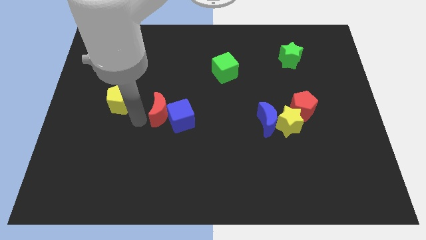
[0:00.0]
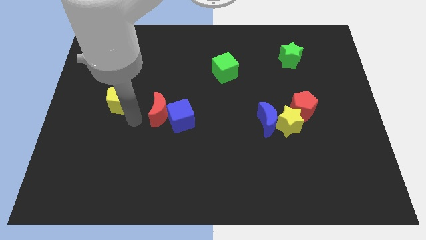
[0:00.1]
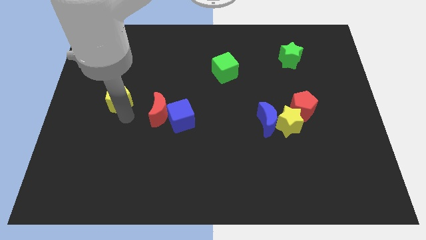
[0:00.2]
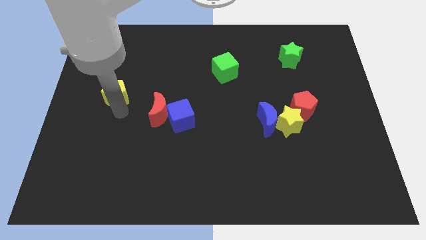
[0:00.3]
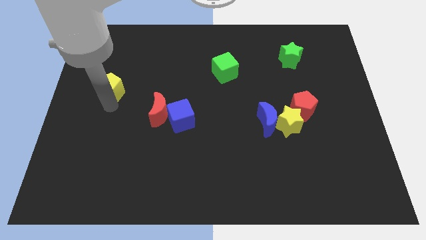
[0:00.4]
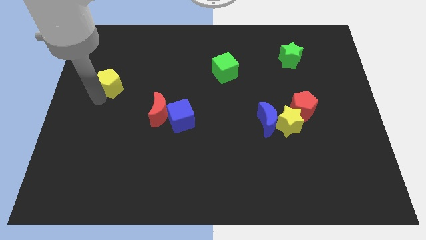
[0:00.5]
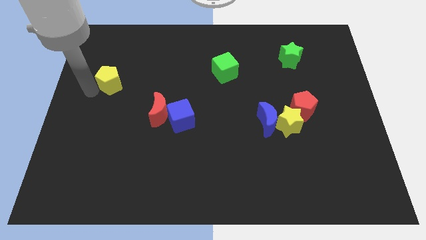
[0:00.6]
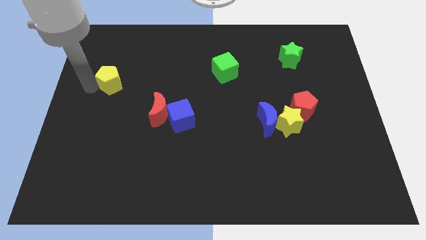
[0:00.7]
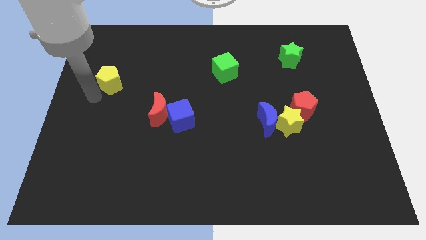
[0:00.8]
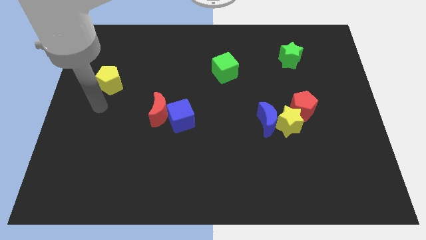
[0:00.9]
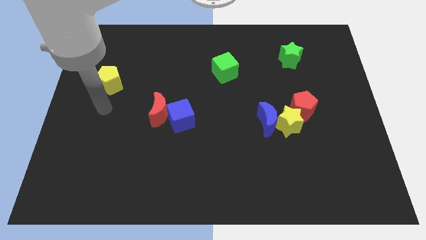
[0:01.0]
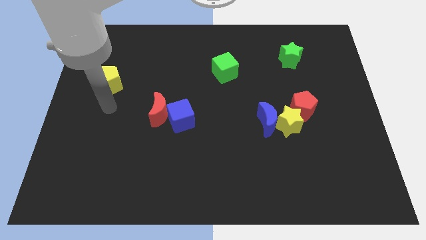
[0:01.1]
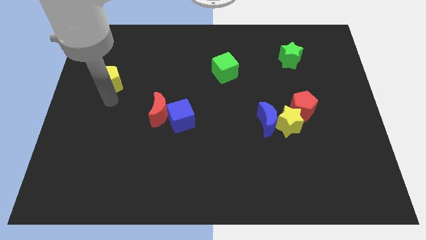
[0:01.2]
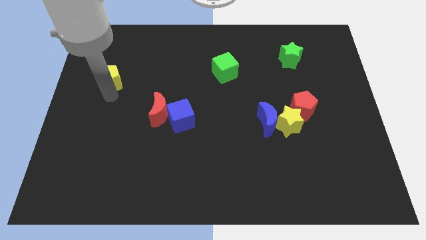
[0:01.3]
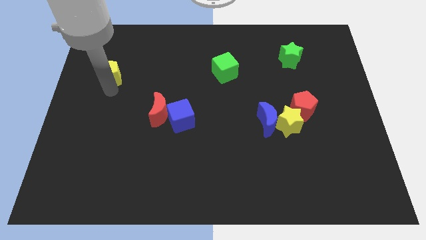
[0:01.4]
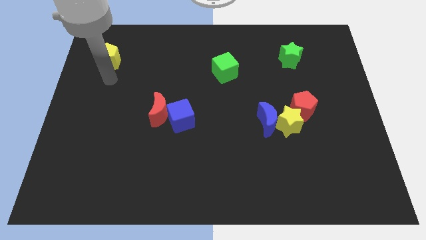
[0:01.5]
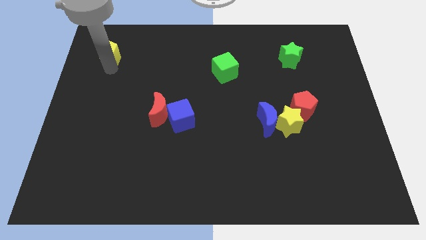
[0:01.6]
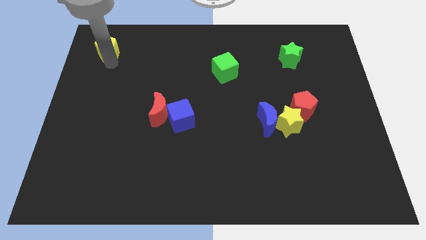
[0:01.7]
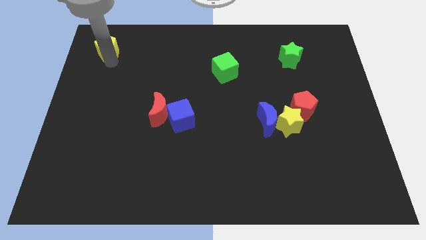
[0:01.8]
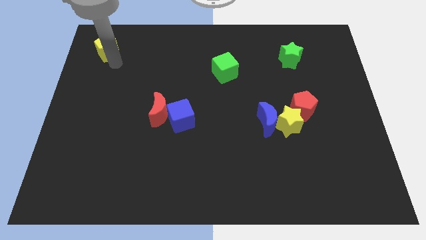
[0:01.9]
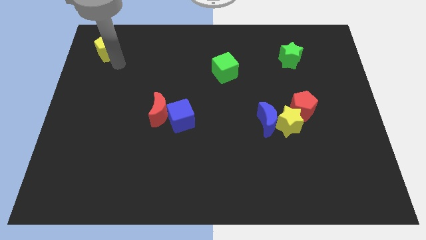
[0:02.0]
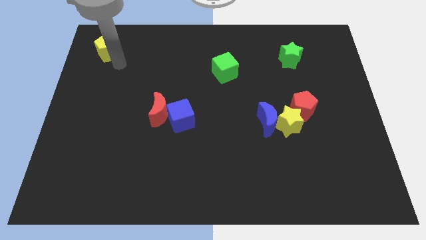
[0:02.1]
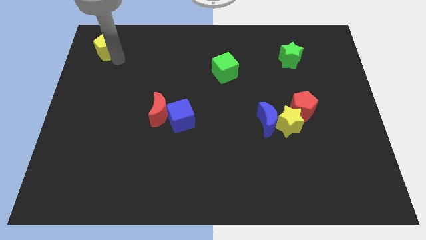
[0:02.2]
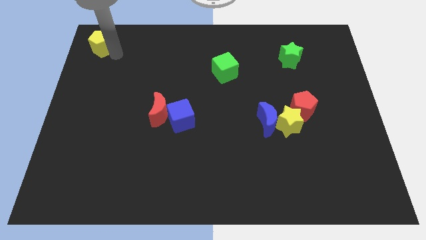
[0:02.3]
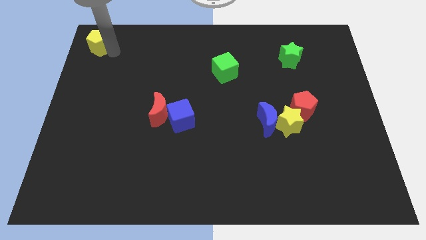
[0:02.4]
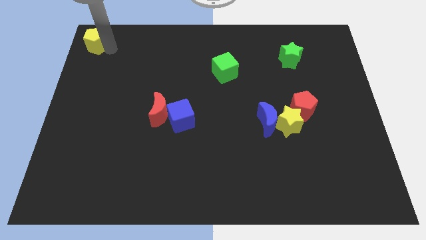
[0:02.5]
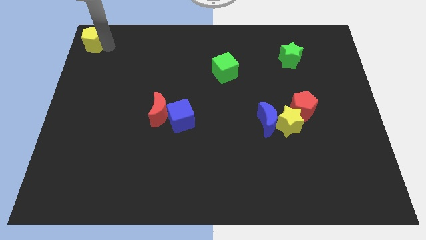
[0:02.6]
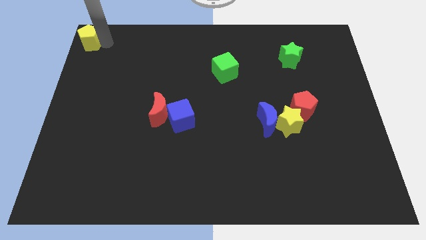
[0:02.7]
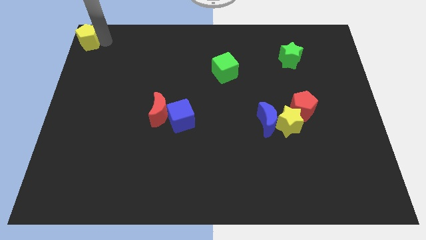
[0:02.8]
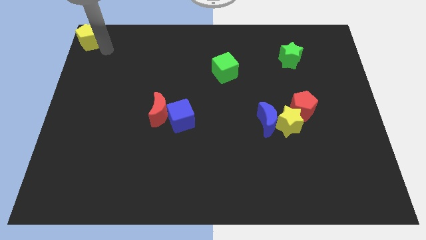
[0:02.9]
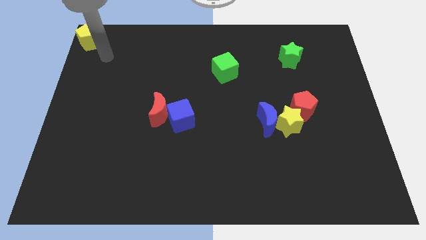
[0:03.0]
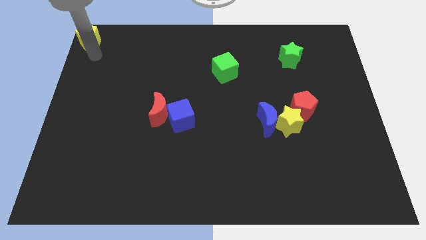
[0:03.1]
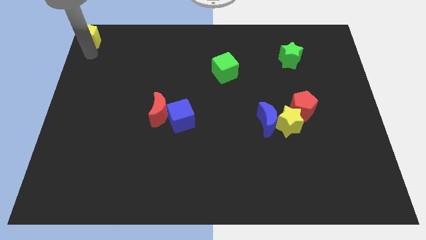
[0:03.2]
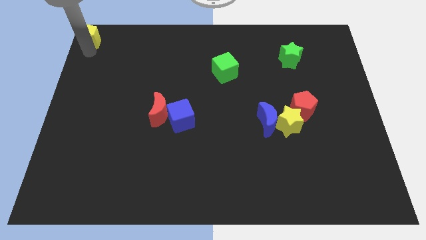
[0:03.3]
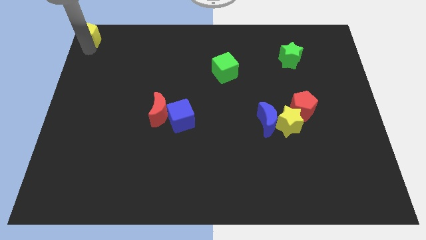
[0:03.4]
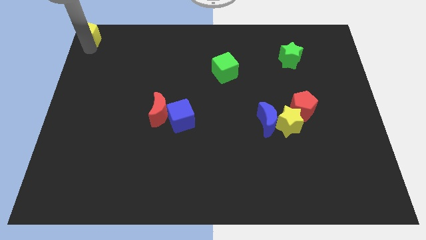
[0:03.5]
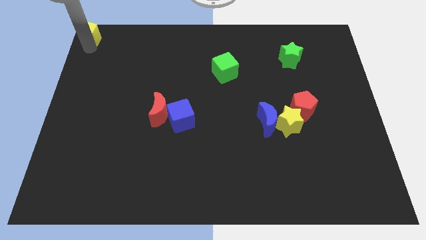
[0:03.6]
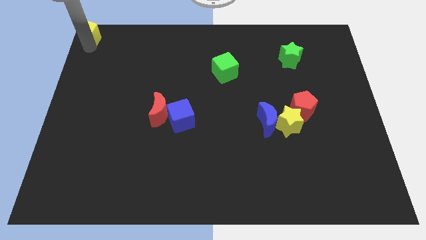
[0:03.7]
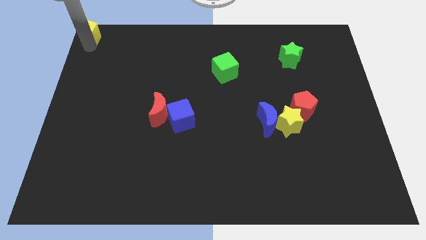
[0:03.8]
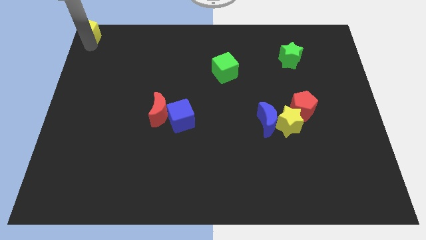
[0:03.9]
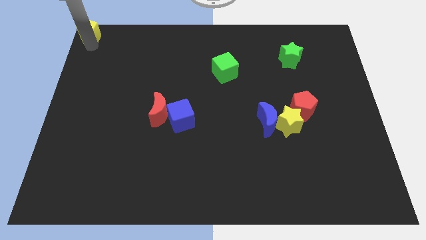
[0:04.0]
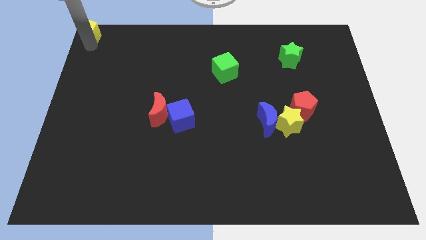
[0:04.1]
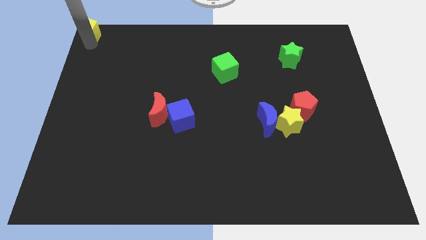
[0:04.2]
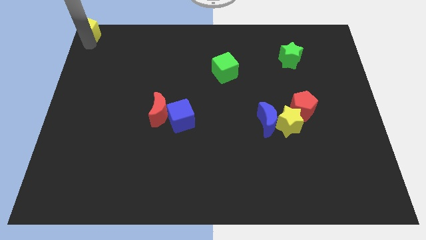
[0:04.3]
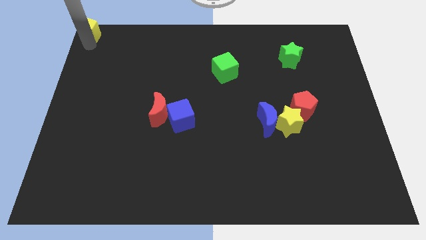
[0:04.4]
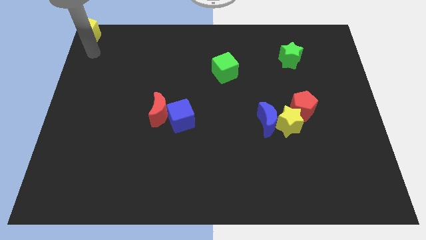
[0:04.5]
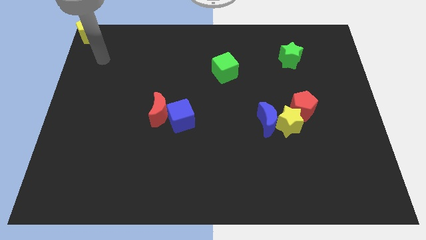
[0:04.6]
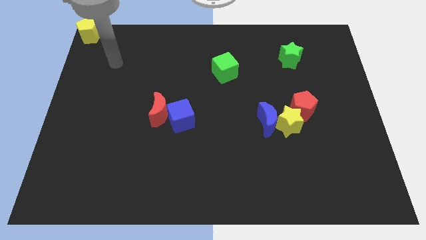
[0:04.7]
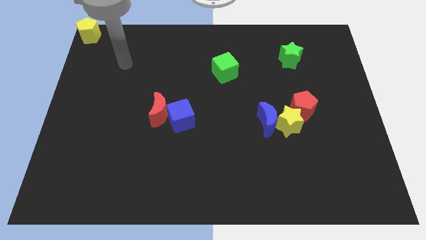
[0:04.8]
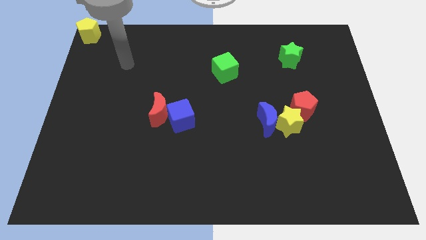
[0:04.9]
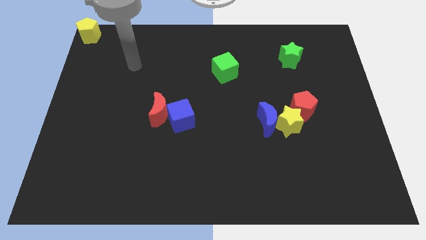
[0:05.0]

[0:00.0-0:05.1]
move the yellow pentagon to the top left corner of the board

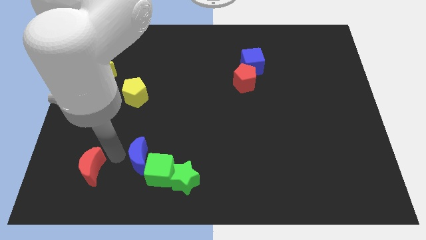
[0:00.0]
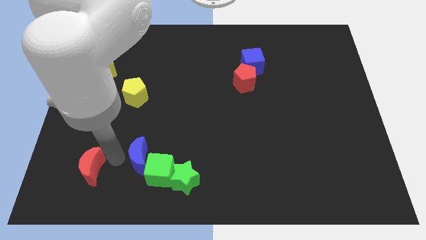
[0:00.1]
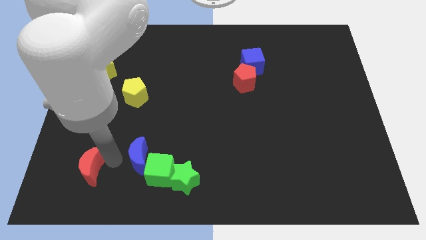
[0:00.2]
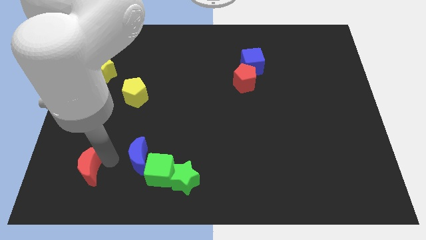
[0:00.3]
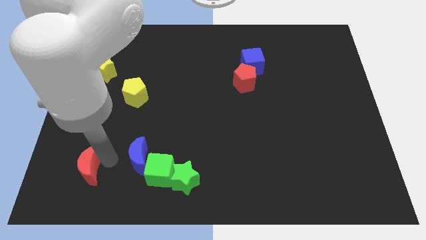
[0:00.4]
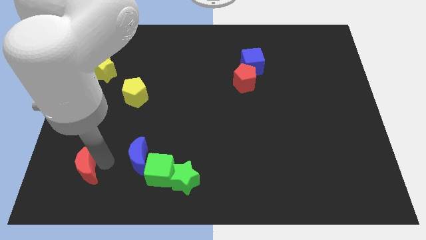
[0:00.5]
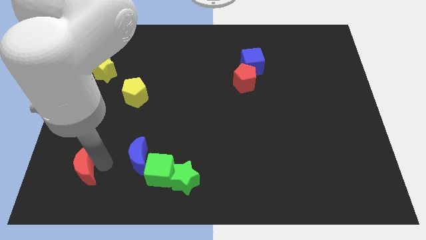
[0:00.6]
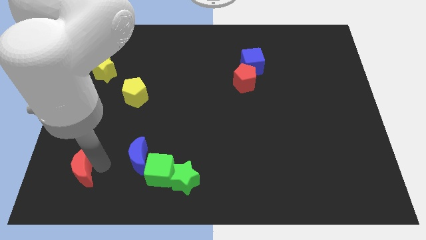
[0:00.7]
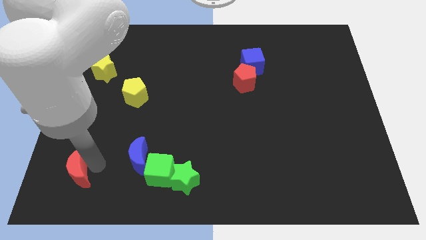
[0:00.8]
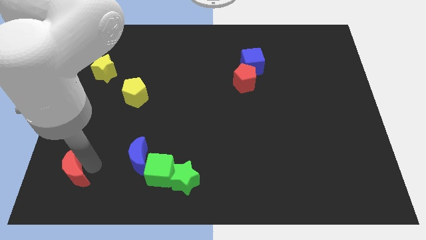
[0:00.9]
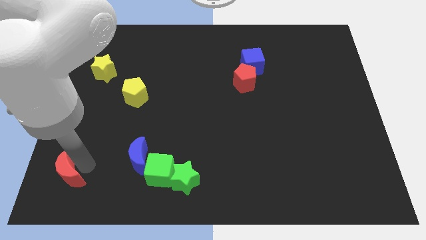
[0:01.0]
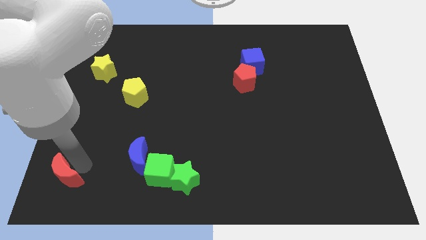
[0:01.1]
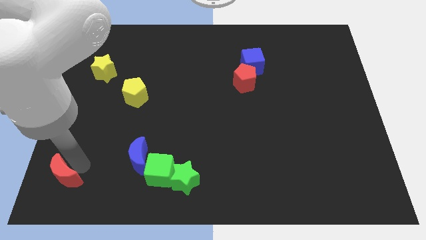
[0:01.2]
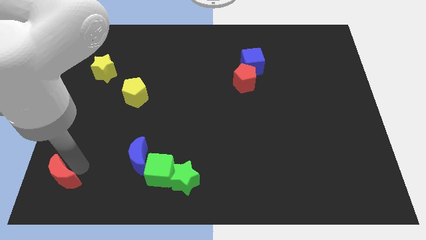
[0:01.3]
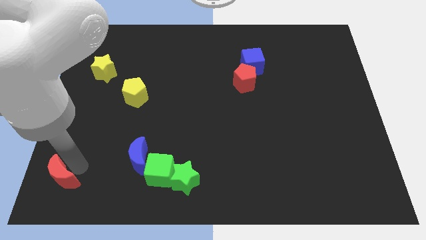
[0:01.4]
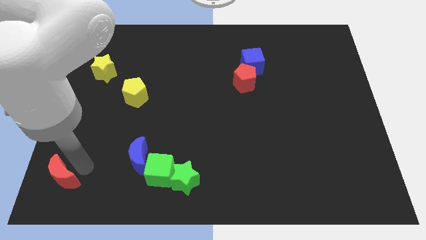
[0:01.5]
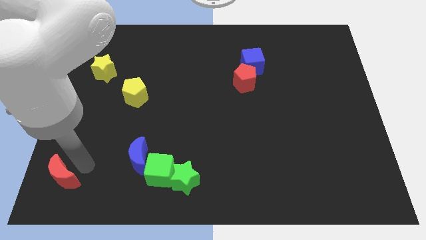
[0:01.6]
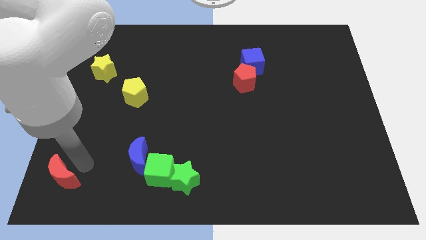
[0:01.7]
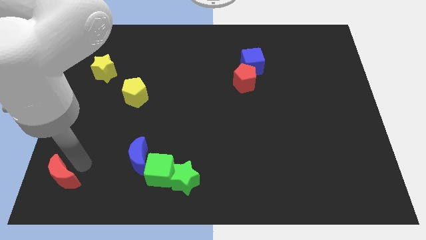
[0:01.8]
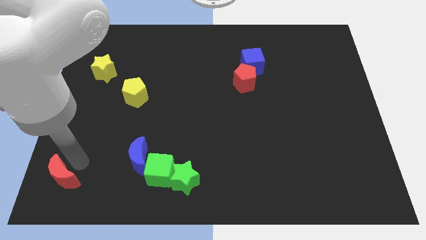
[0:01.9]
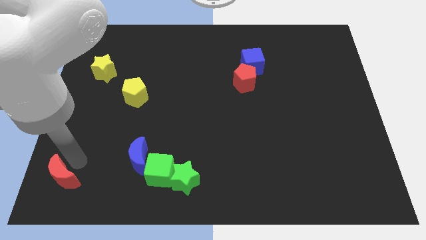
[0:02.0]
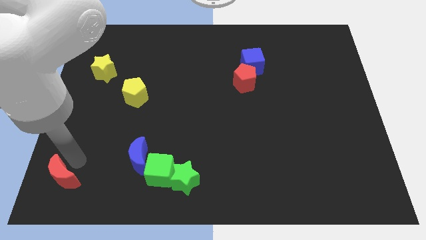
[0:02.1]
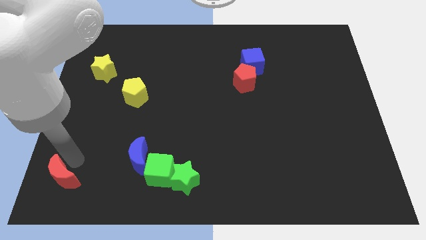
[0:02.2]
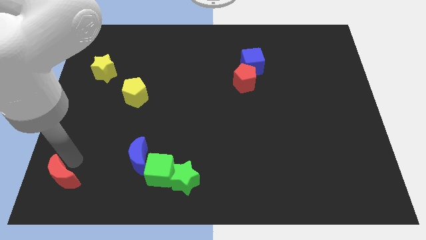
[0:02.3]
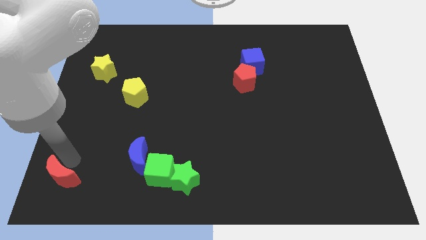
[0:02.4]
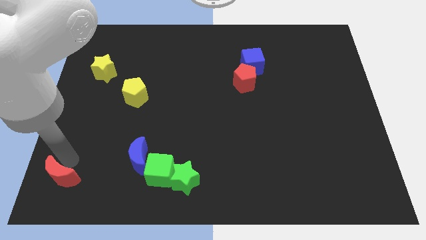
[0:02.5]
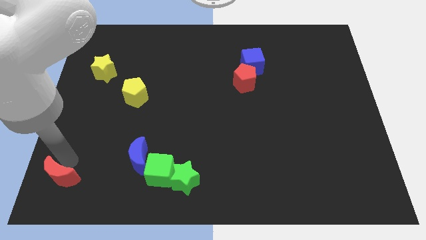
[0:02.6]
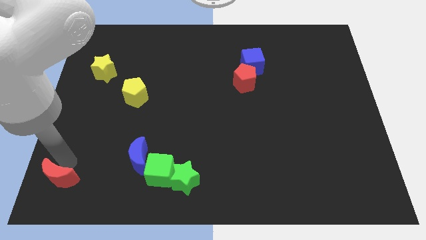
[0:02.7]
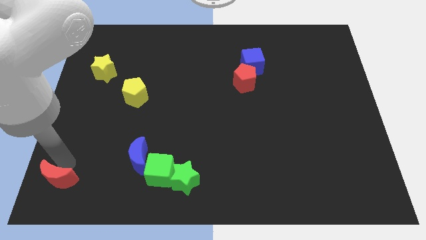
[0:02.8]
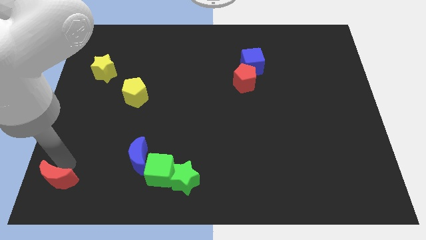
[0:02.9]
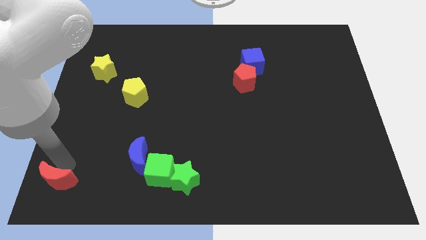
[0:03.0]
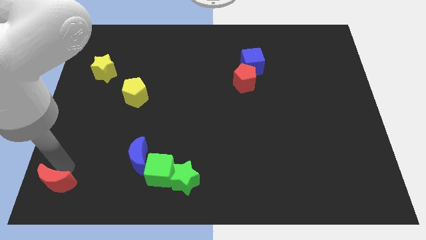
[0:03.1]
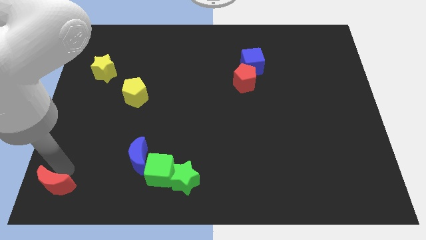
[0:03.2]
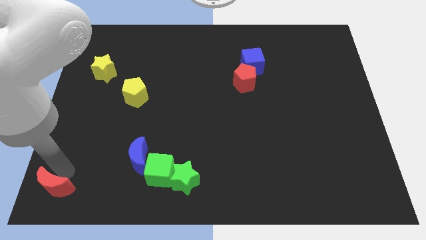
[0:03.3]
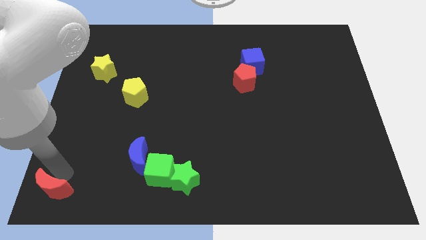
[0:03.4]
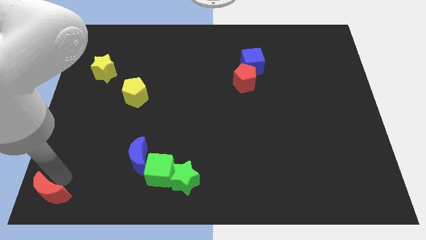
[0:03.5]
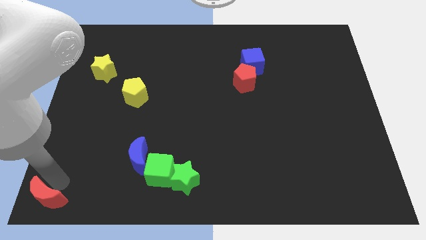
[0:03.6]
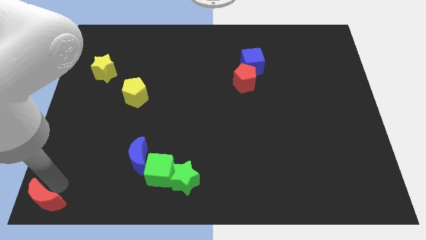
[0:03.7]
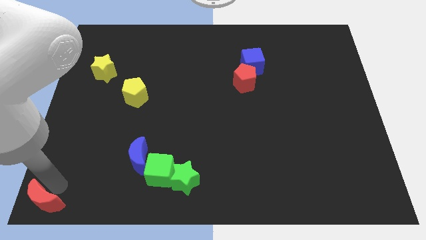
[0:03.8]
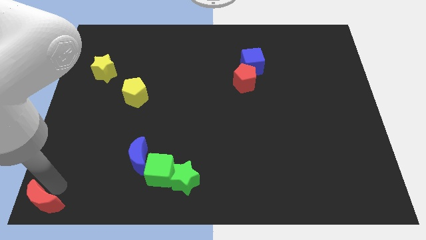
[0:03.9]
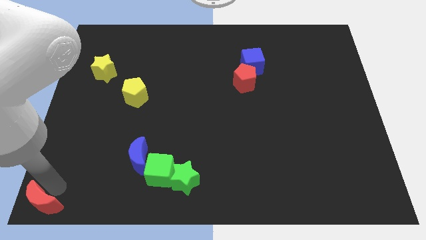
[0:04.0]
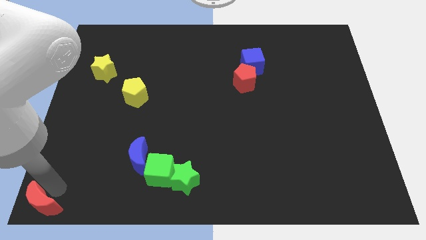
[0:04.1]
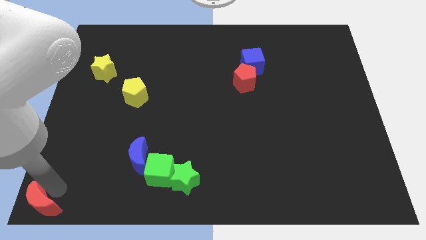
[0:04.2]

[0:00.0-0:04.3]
move the red crescent to the bottom left of the board
